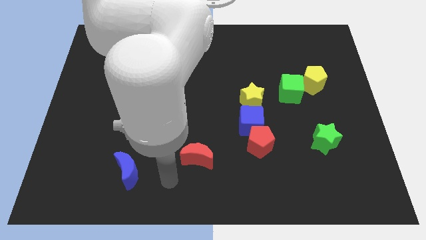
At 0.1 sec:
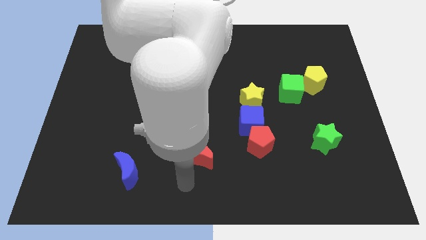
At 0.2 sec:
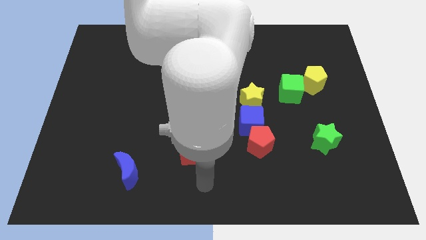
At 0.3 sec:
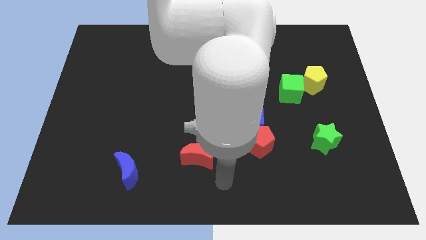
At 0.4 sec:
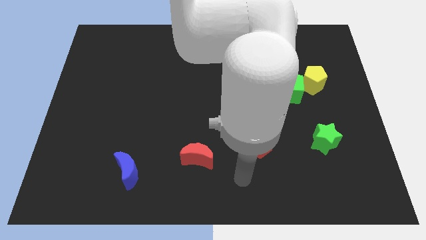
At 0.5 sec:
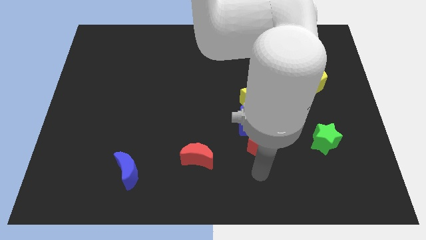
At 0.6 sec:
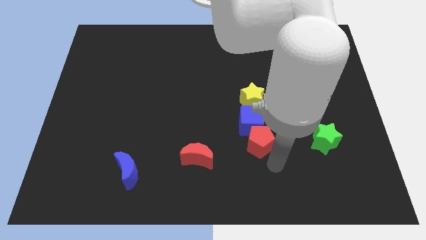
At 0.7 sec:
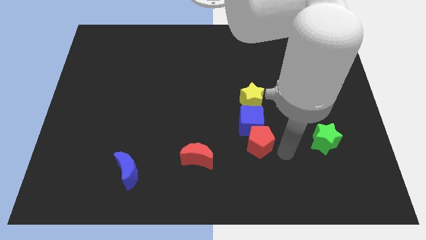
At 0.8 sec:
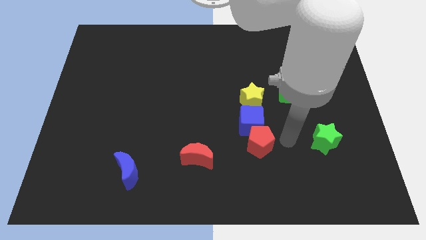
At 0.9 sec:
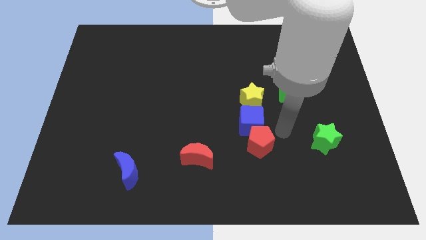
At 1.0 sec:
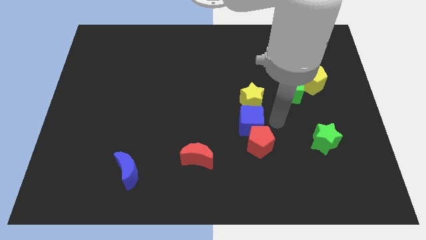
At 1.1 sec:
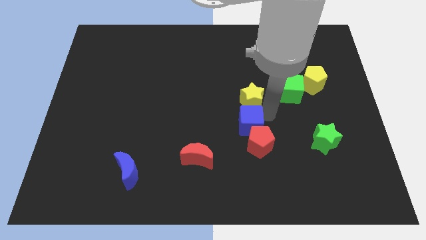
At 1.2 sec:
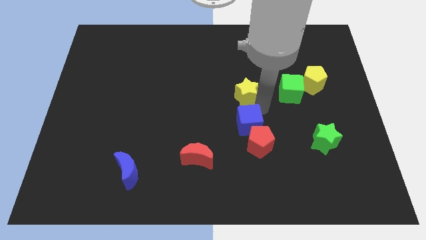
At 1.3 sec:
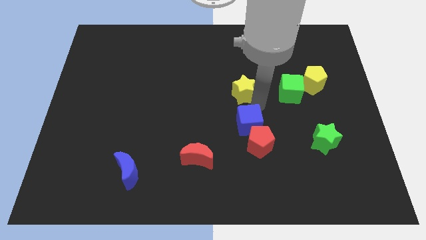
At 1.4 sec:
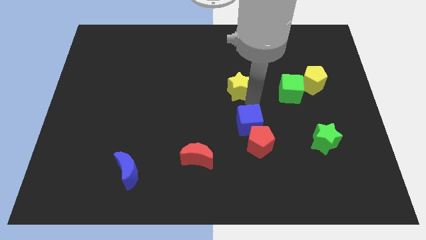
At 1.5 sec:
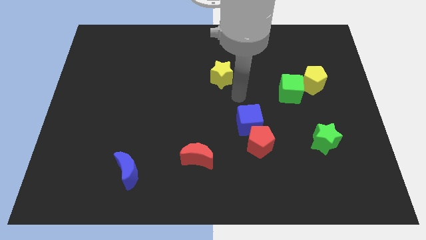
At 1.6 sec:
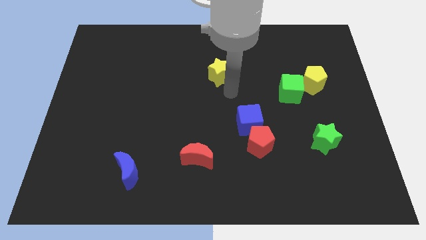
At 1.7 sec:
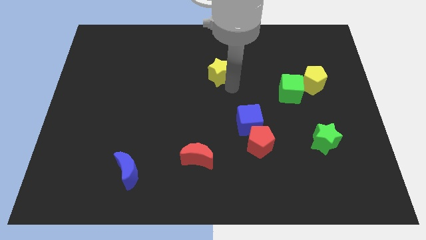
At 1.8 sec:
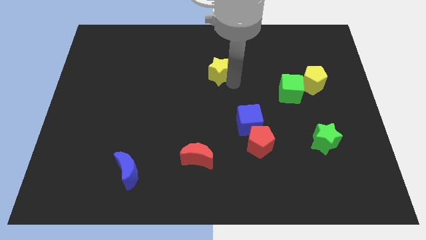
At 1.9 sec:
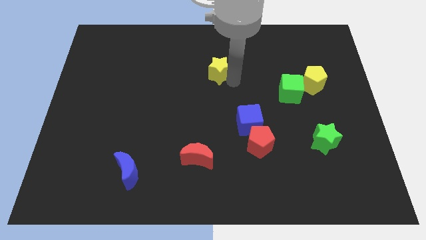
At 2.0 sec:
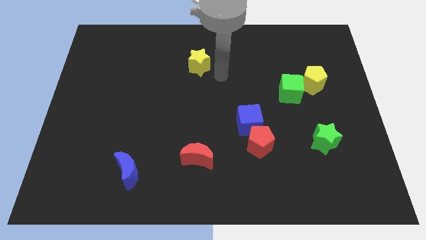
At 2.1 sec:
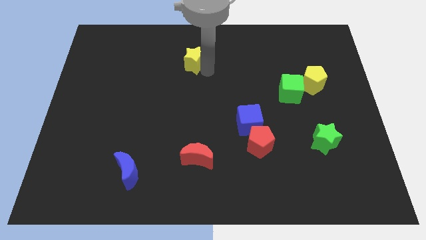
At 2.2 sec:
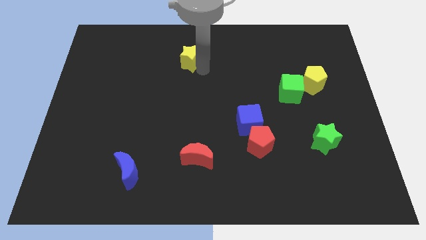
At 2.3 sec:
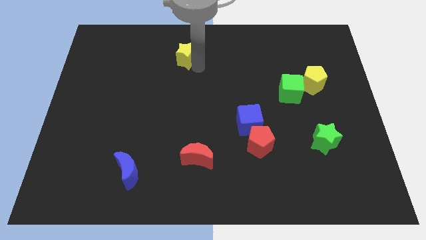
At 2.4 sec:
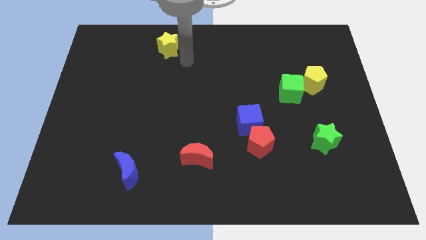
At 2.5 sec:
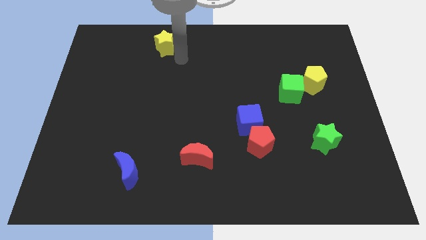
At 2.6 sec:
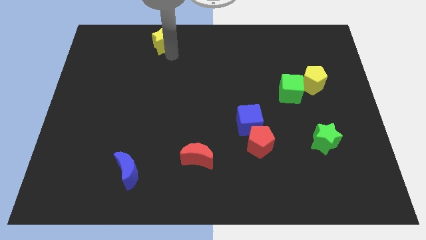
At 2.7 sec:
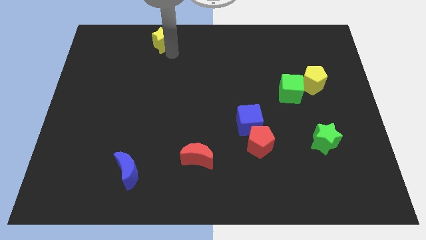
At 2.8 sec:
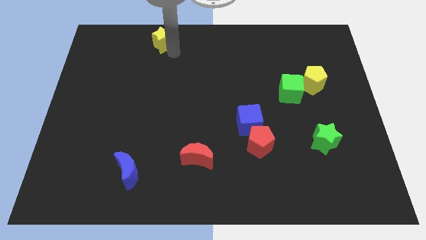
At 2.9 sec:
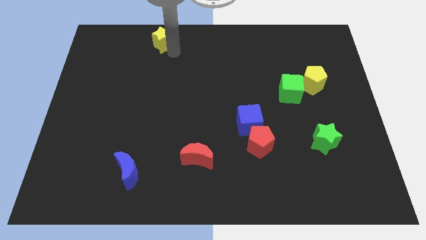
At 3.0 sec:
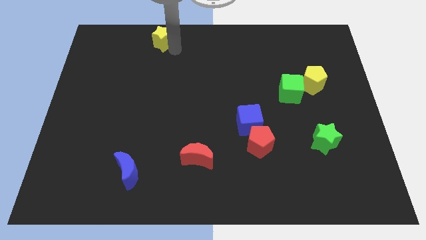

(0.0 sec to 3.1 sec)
move the yellow star away from the blue cube

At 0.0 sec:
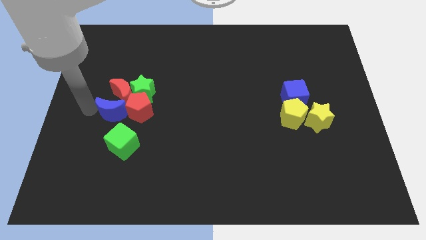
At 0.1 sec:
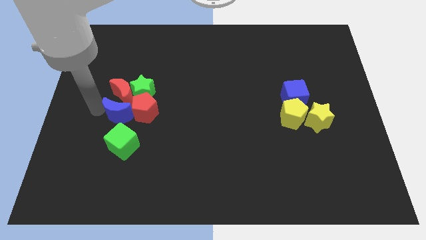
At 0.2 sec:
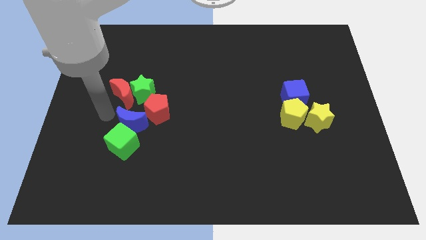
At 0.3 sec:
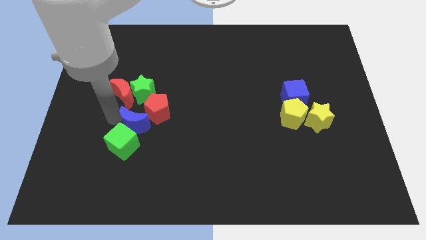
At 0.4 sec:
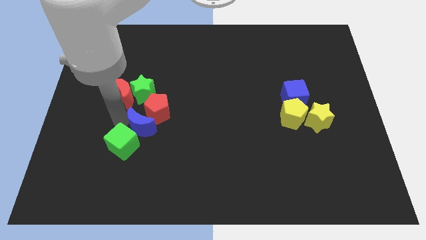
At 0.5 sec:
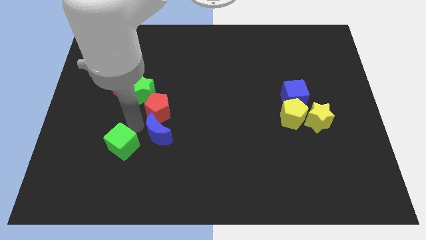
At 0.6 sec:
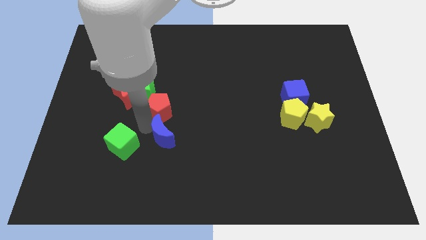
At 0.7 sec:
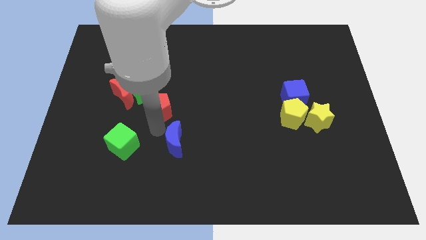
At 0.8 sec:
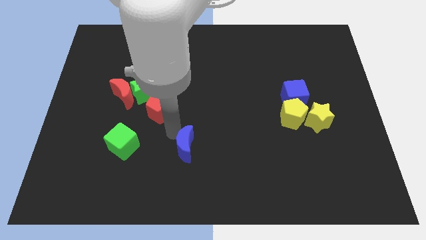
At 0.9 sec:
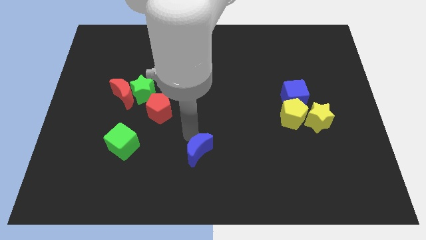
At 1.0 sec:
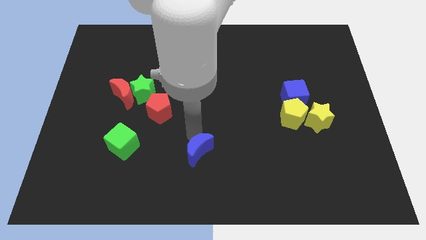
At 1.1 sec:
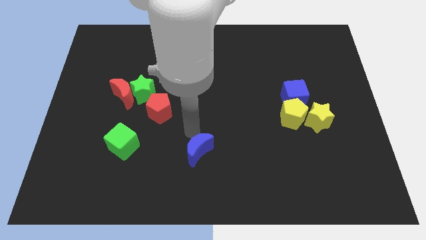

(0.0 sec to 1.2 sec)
push the blue moon to the right of the green cube

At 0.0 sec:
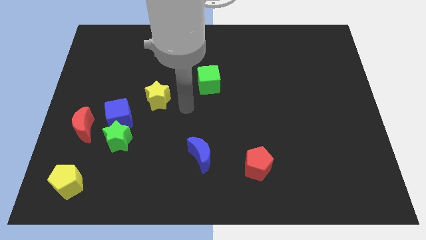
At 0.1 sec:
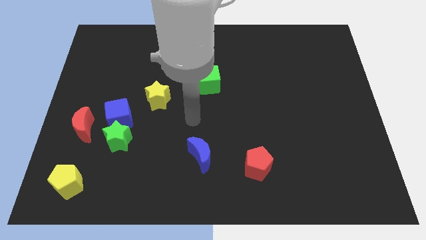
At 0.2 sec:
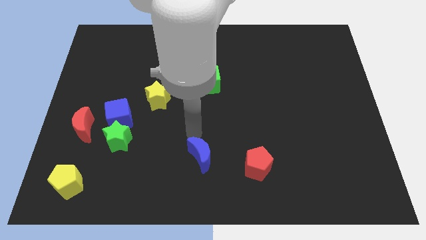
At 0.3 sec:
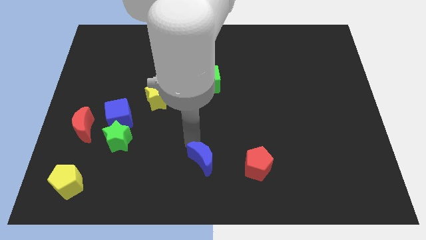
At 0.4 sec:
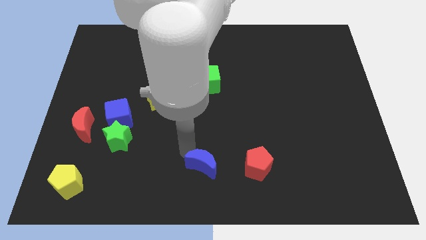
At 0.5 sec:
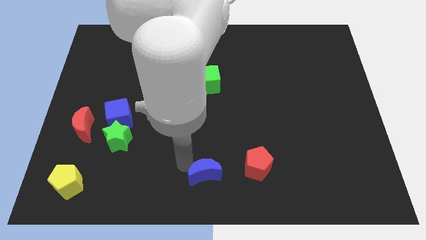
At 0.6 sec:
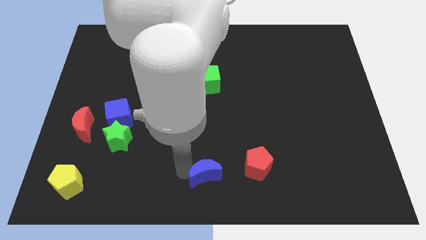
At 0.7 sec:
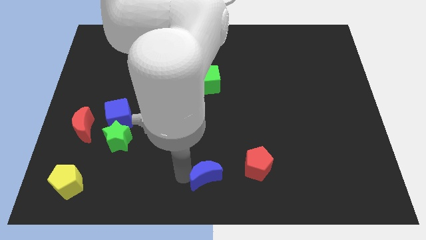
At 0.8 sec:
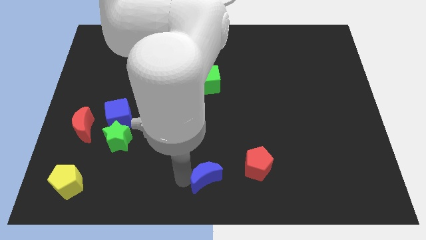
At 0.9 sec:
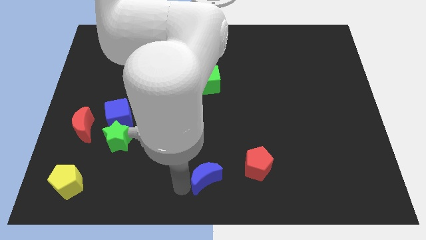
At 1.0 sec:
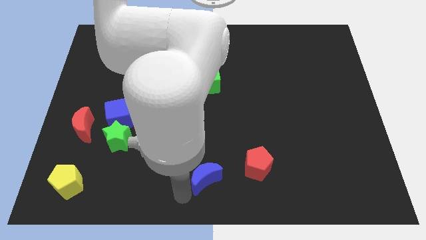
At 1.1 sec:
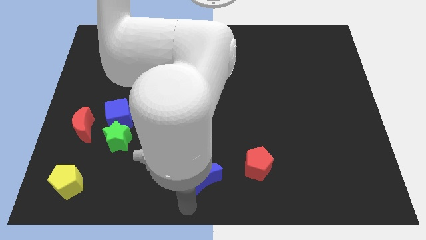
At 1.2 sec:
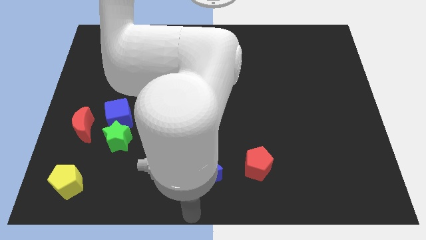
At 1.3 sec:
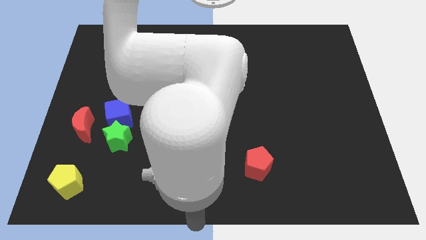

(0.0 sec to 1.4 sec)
slightly move the blue crescent

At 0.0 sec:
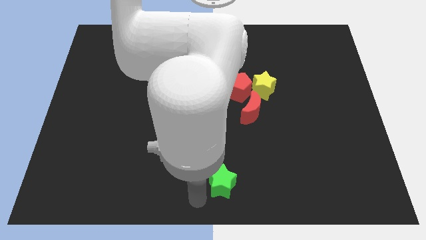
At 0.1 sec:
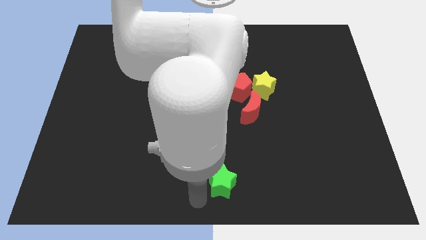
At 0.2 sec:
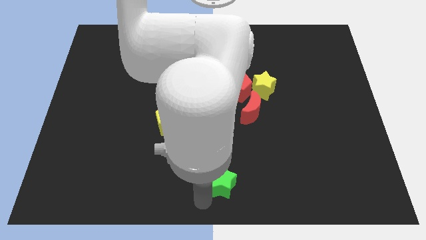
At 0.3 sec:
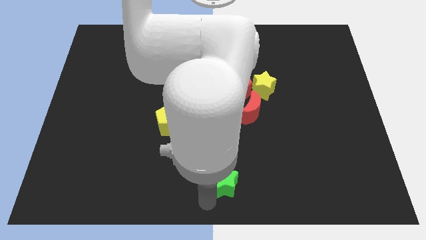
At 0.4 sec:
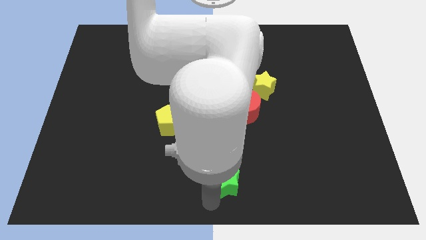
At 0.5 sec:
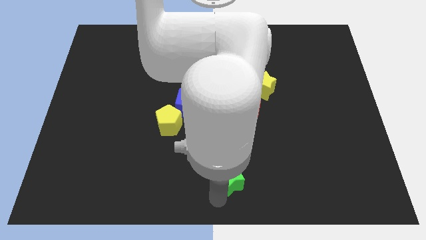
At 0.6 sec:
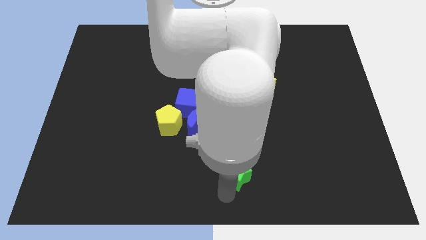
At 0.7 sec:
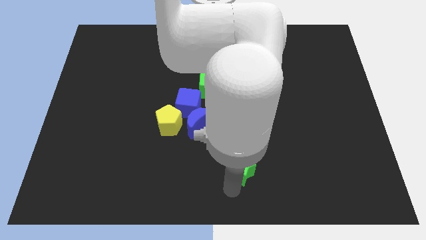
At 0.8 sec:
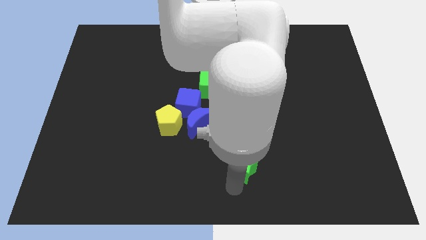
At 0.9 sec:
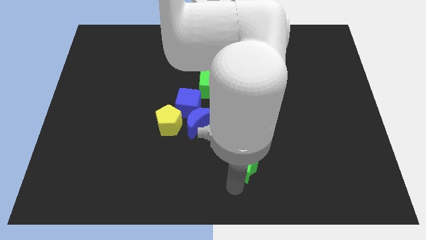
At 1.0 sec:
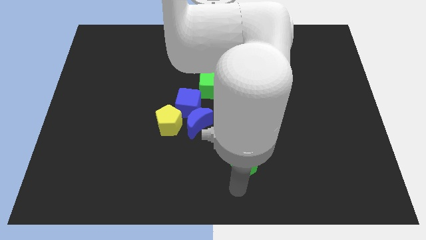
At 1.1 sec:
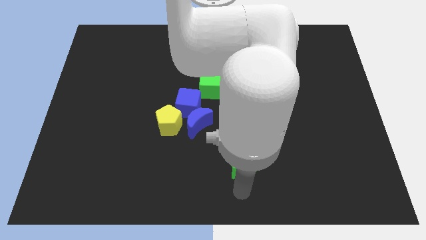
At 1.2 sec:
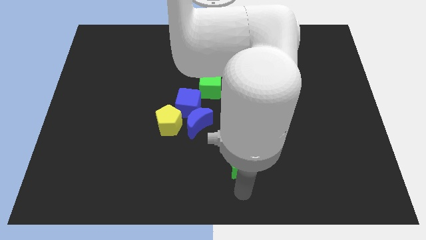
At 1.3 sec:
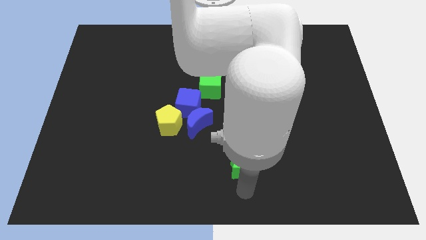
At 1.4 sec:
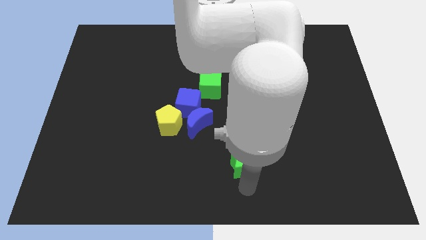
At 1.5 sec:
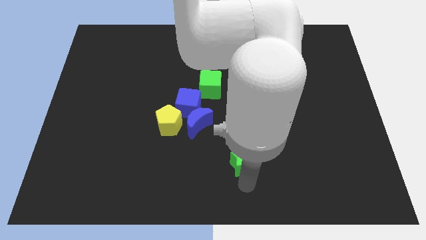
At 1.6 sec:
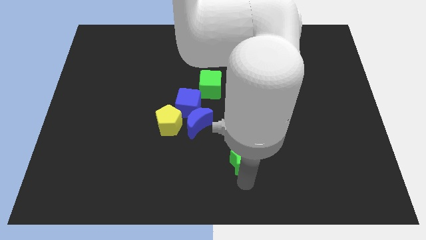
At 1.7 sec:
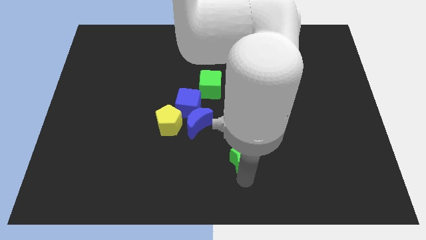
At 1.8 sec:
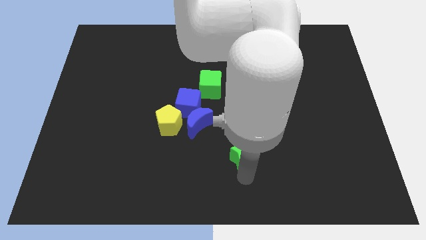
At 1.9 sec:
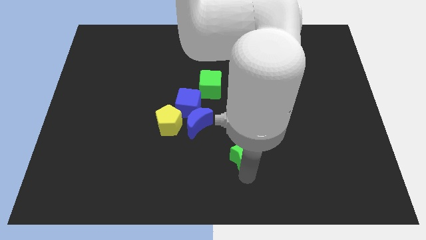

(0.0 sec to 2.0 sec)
push the green star towards the top of the board

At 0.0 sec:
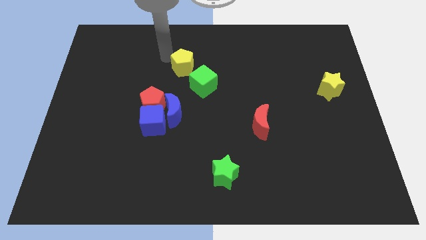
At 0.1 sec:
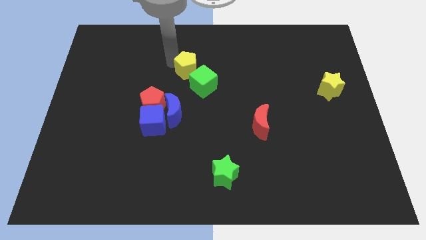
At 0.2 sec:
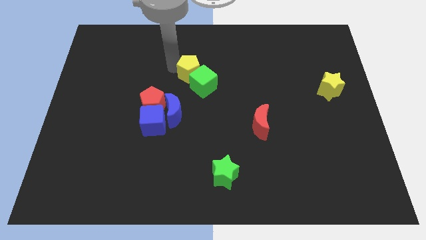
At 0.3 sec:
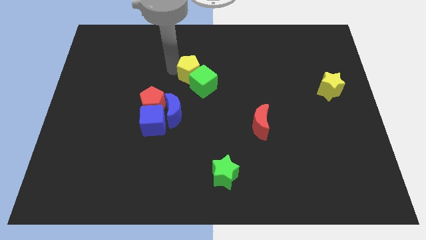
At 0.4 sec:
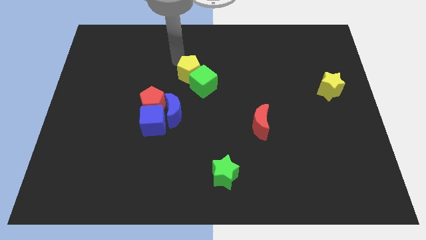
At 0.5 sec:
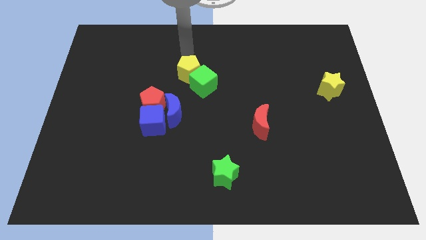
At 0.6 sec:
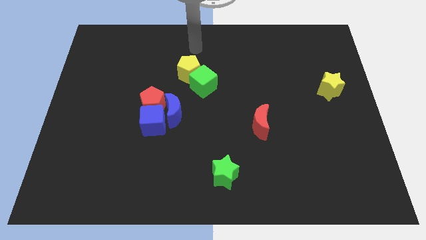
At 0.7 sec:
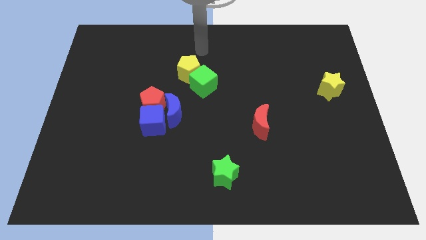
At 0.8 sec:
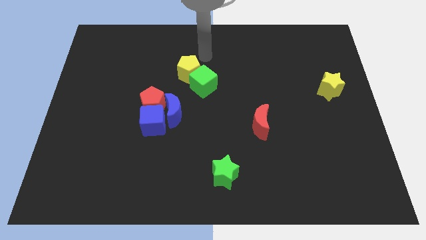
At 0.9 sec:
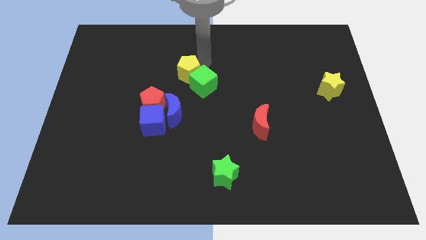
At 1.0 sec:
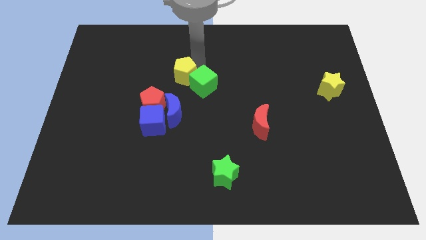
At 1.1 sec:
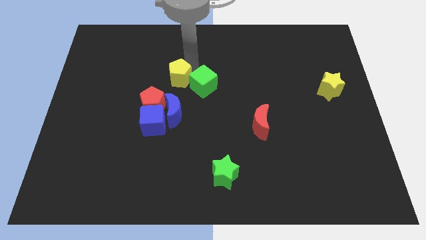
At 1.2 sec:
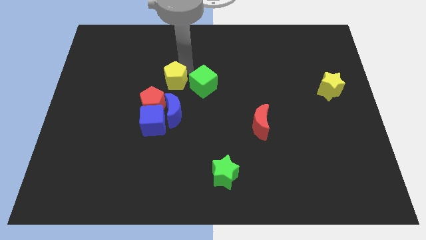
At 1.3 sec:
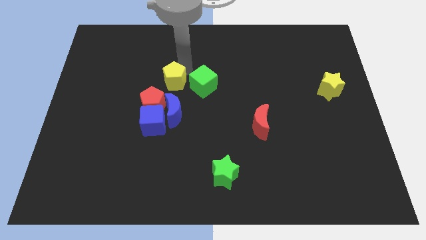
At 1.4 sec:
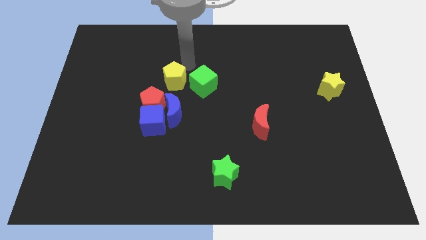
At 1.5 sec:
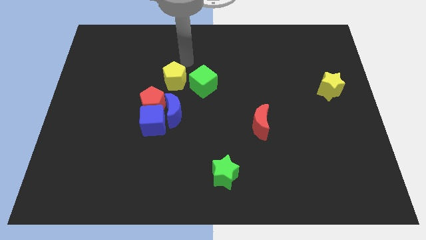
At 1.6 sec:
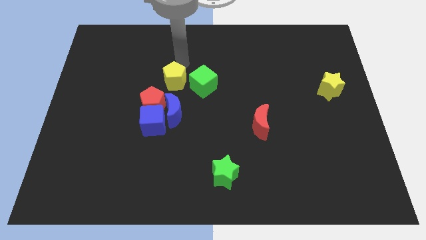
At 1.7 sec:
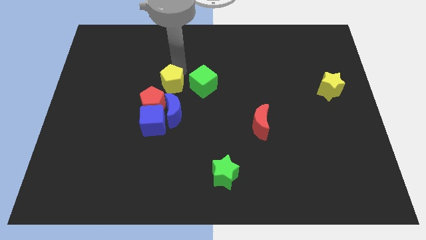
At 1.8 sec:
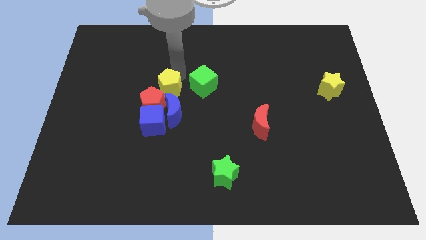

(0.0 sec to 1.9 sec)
separate the yellow pentagon and green cube
